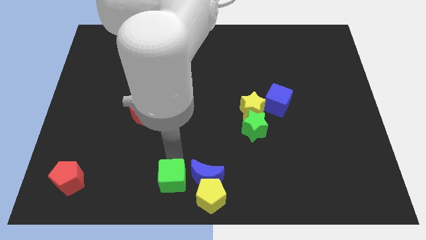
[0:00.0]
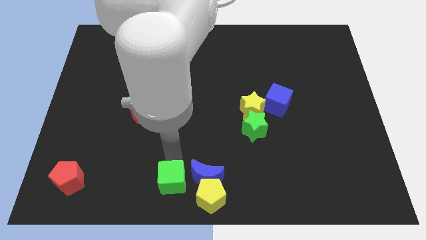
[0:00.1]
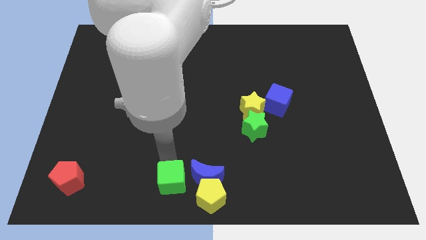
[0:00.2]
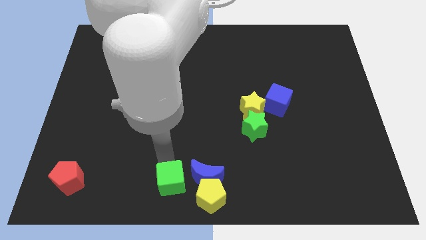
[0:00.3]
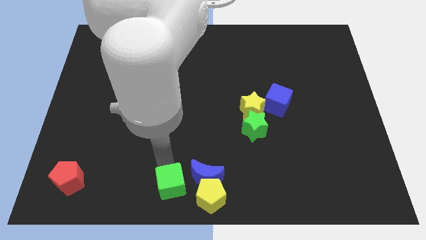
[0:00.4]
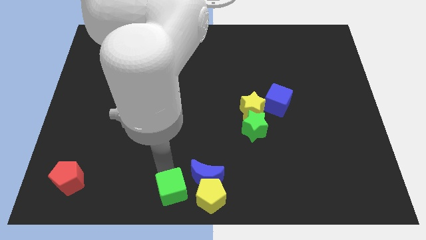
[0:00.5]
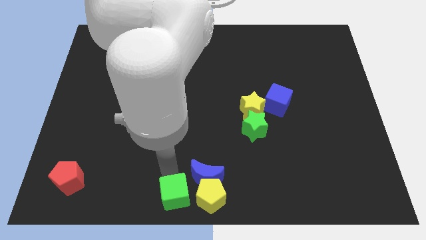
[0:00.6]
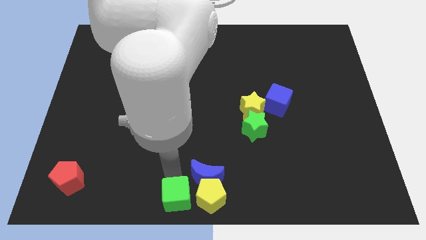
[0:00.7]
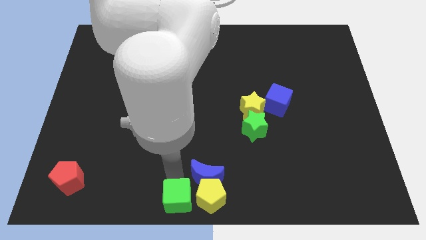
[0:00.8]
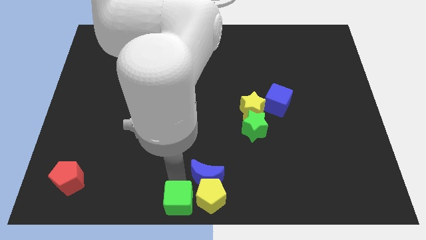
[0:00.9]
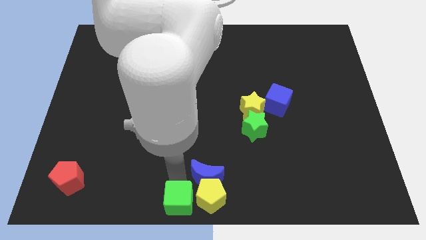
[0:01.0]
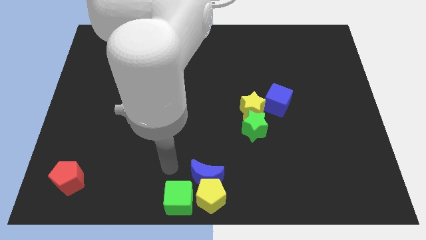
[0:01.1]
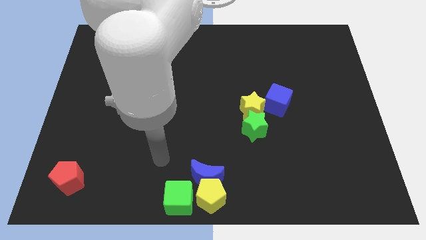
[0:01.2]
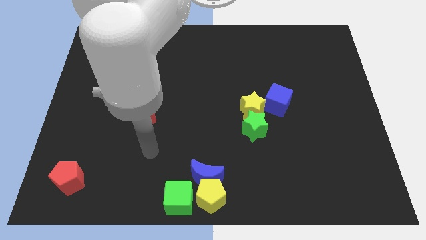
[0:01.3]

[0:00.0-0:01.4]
place green cube beside yellow pentagon

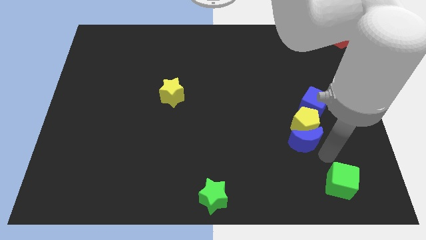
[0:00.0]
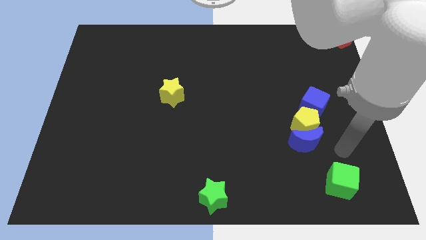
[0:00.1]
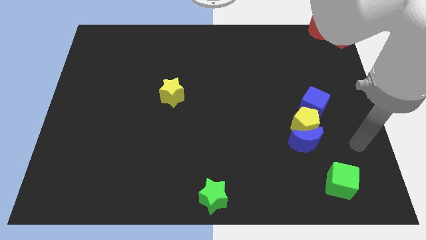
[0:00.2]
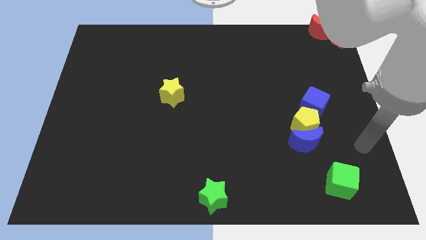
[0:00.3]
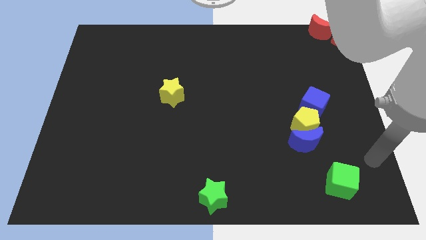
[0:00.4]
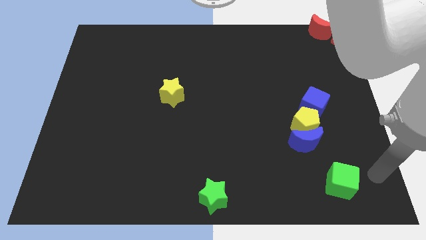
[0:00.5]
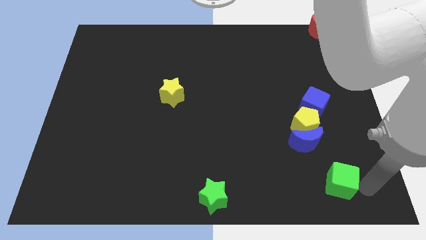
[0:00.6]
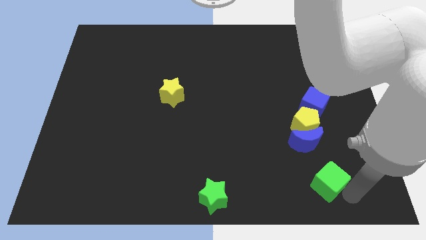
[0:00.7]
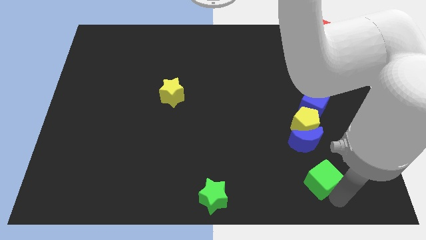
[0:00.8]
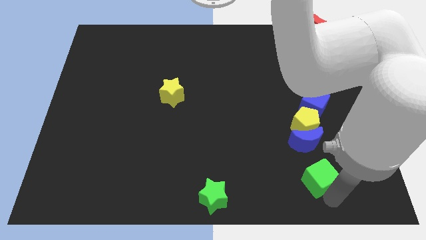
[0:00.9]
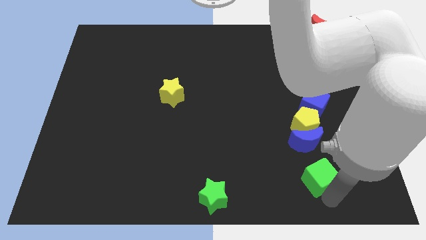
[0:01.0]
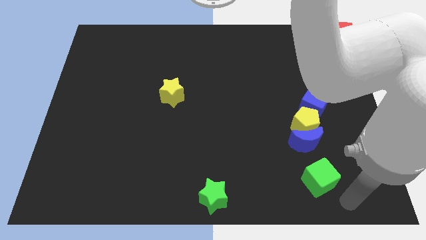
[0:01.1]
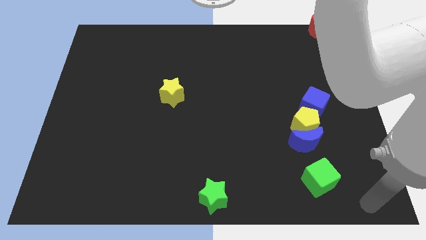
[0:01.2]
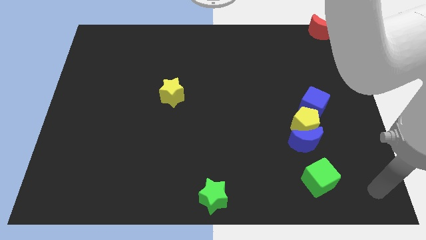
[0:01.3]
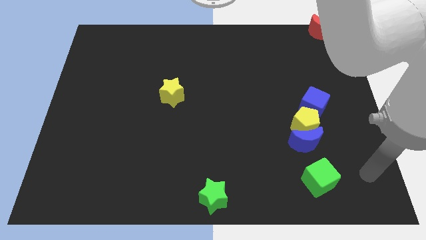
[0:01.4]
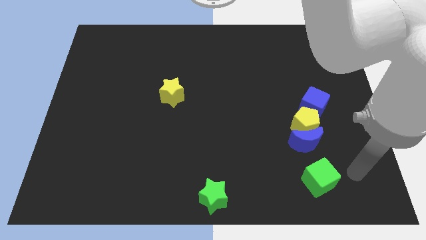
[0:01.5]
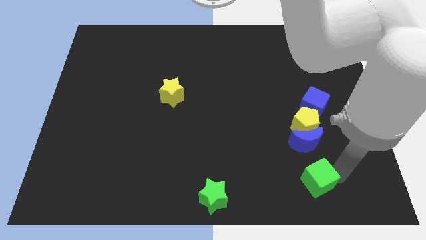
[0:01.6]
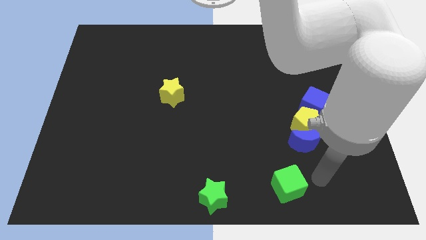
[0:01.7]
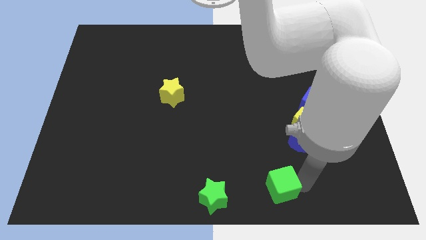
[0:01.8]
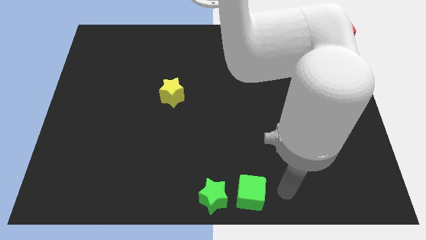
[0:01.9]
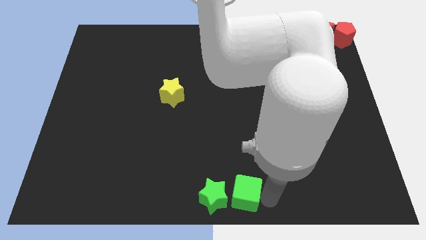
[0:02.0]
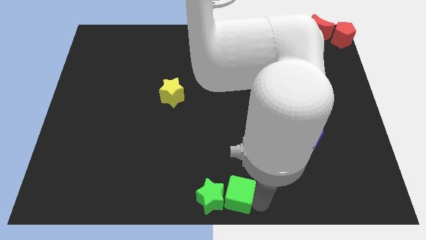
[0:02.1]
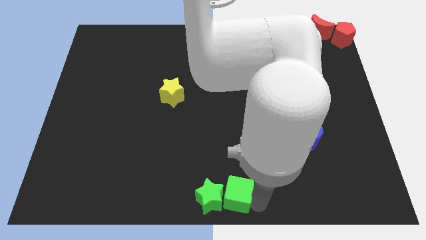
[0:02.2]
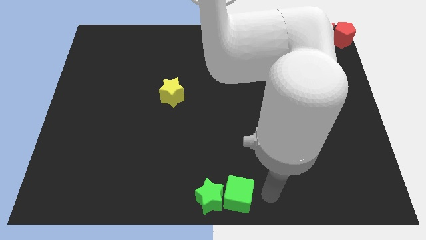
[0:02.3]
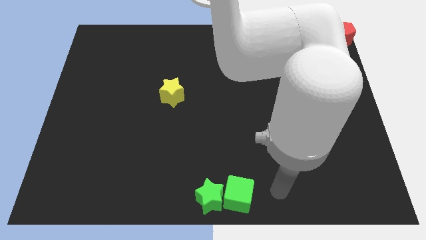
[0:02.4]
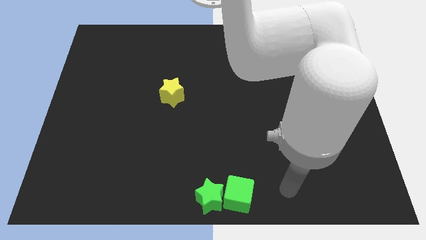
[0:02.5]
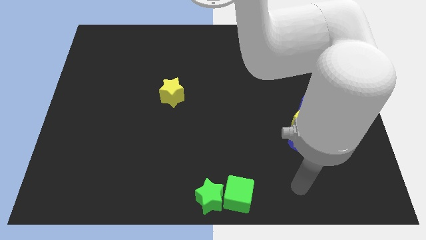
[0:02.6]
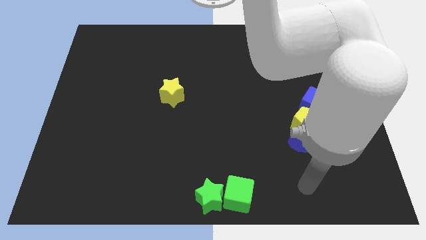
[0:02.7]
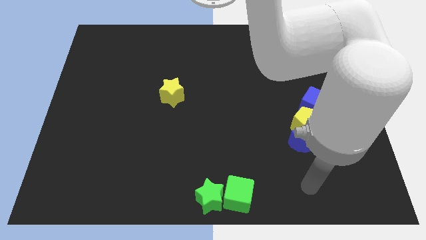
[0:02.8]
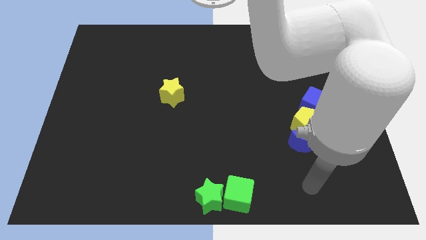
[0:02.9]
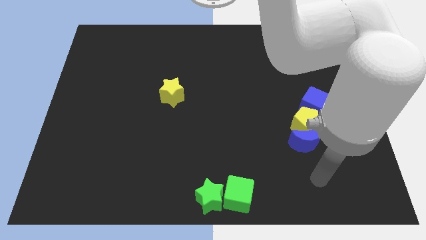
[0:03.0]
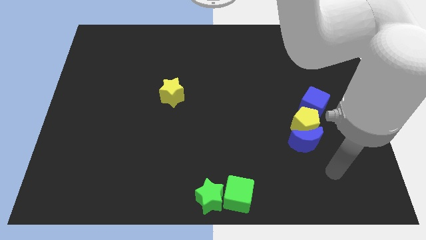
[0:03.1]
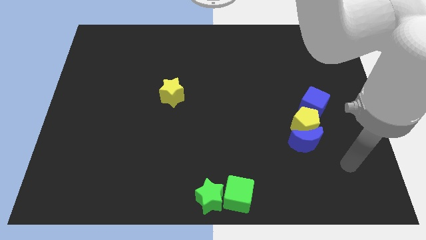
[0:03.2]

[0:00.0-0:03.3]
move the green cube to the bottom center of the board

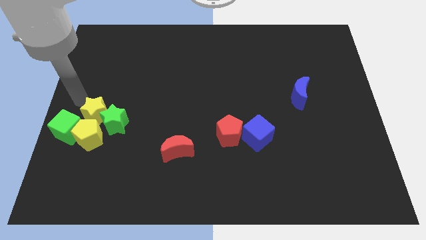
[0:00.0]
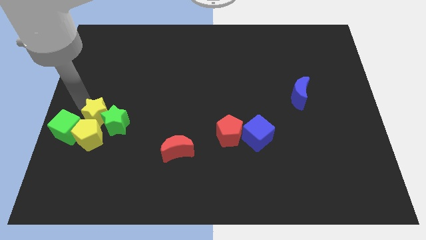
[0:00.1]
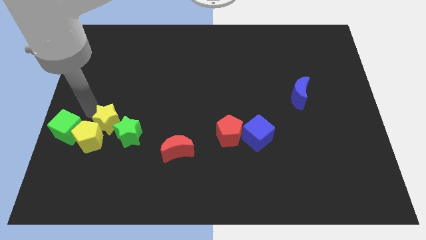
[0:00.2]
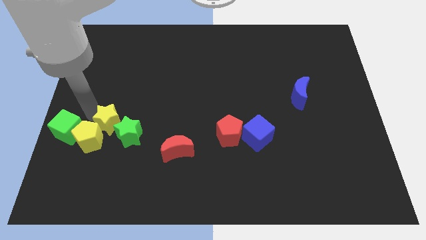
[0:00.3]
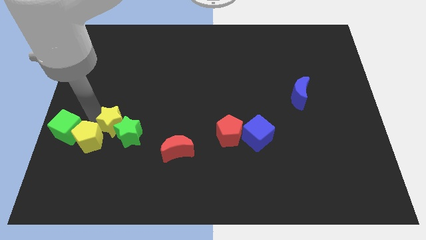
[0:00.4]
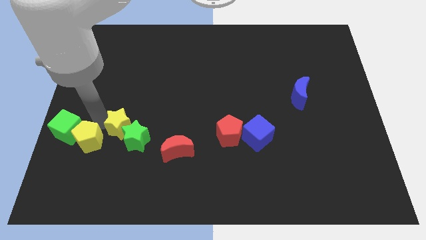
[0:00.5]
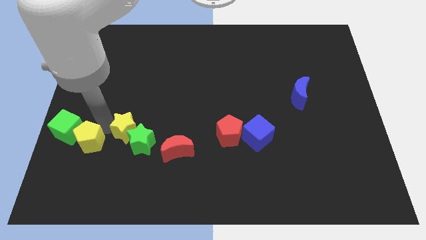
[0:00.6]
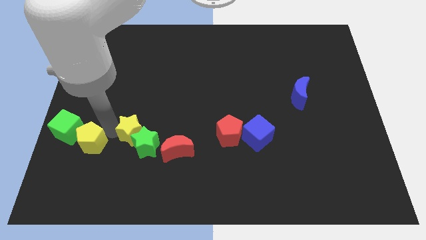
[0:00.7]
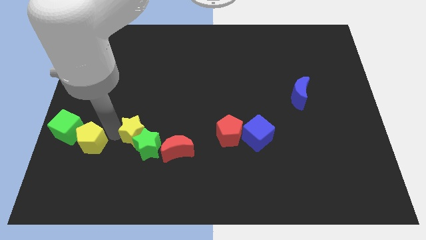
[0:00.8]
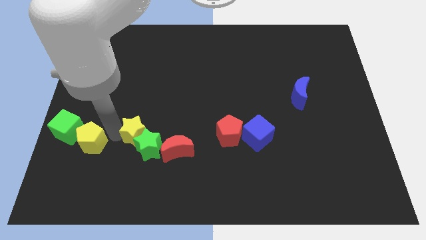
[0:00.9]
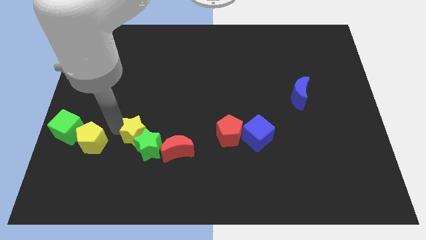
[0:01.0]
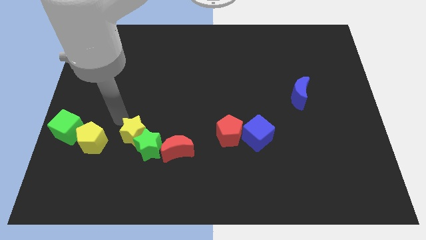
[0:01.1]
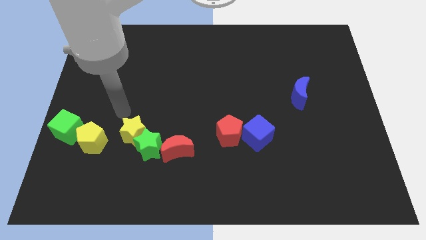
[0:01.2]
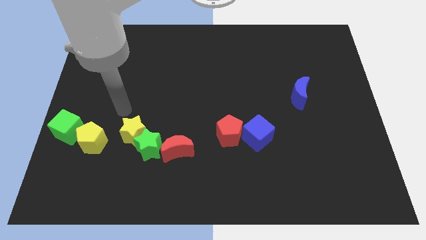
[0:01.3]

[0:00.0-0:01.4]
move stars to the left of the red crescent

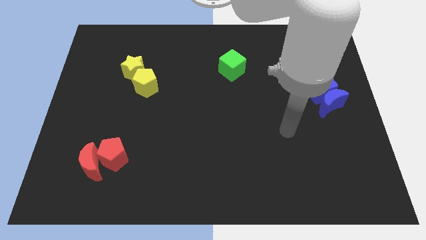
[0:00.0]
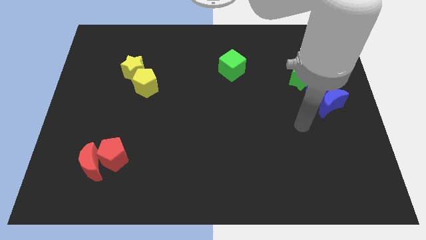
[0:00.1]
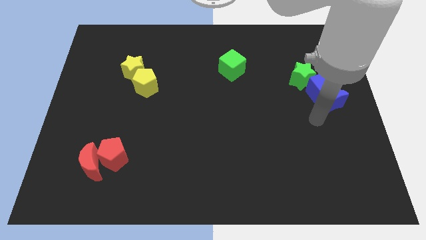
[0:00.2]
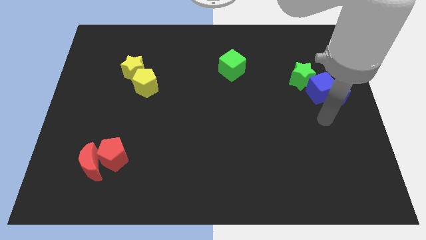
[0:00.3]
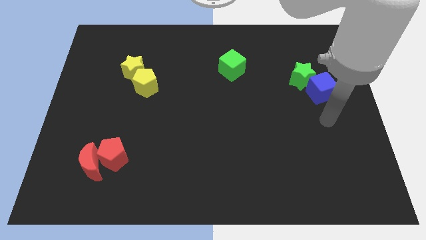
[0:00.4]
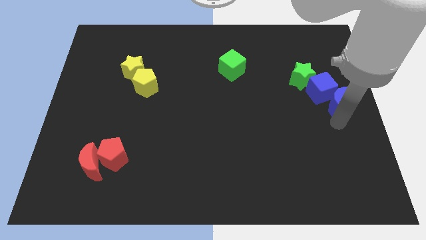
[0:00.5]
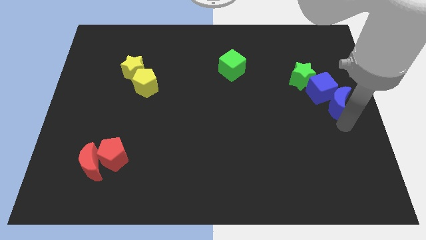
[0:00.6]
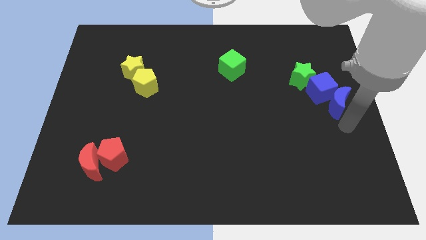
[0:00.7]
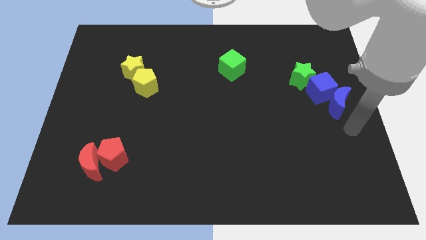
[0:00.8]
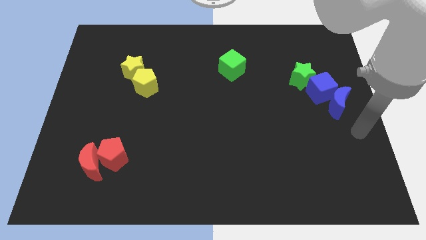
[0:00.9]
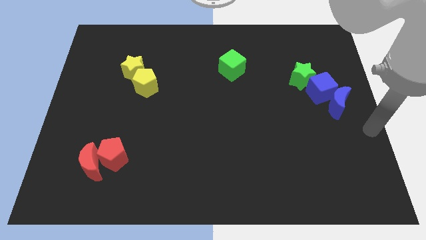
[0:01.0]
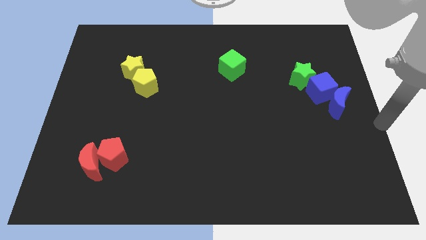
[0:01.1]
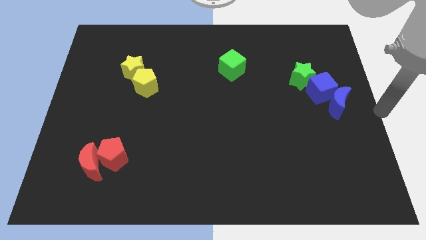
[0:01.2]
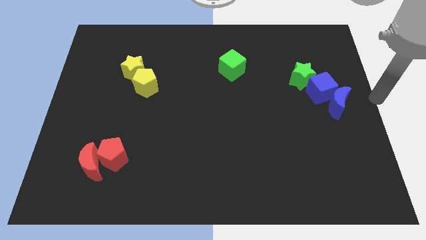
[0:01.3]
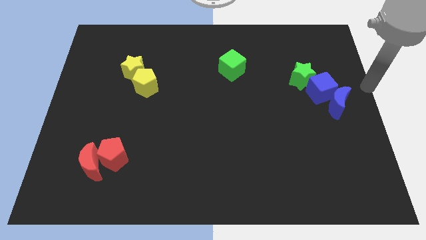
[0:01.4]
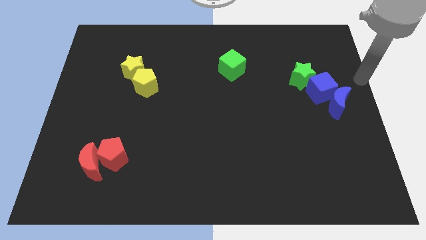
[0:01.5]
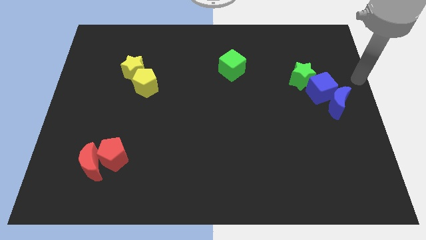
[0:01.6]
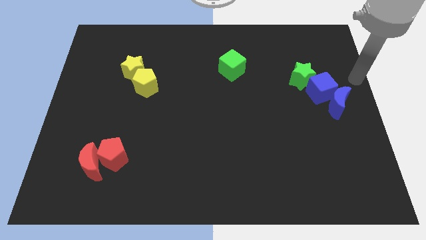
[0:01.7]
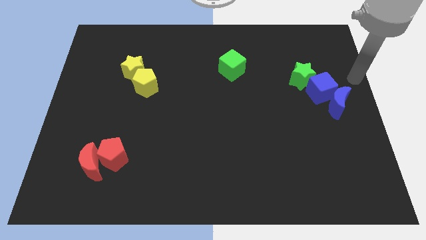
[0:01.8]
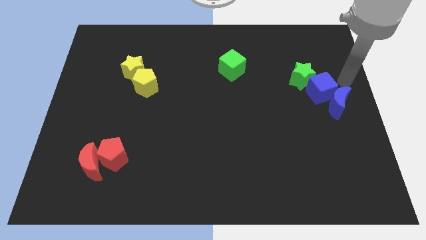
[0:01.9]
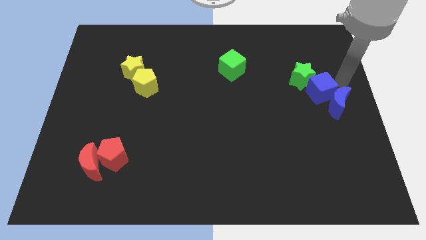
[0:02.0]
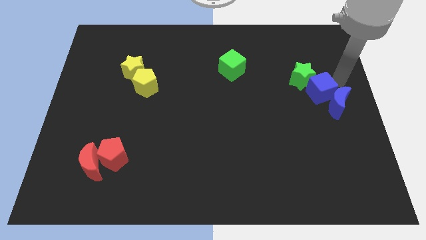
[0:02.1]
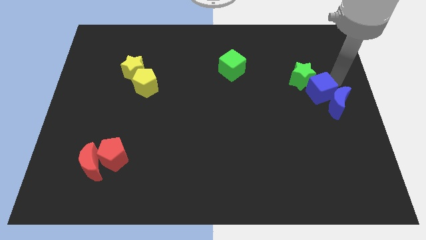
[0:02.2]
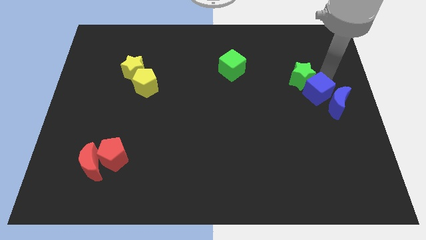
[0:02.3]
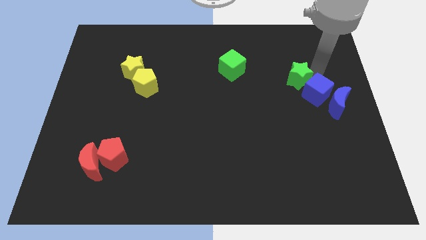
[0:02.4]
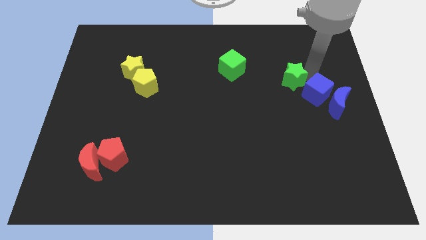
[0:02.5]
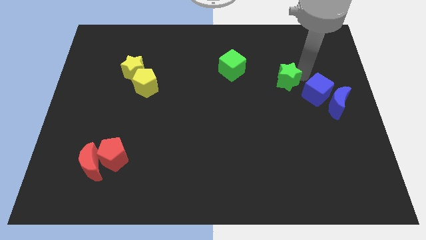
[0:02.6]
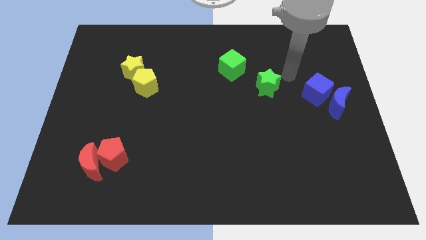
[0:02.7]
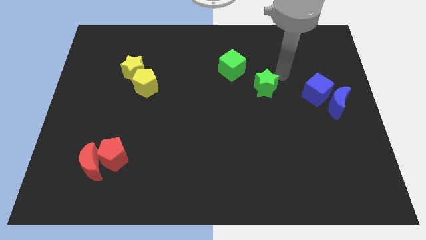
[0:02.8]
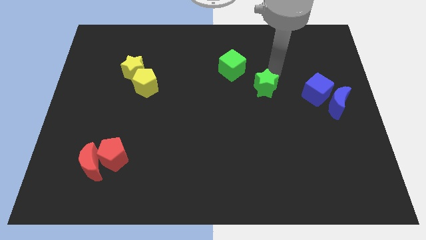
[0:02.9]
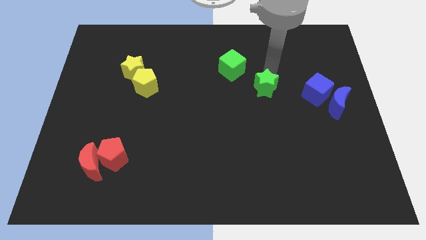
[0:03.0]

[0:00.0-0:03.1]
separate the green star away from the blue cube
